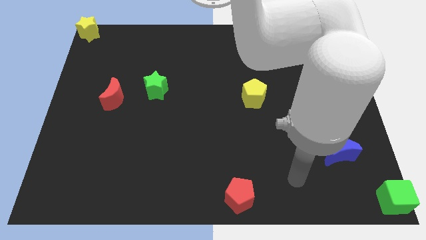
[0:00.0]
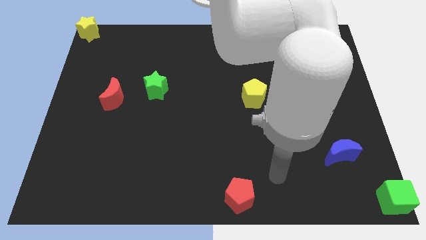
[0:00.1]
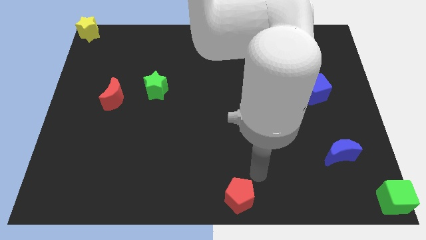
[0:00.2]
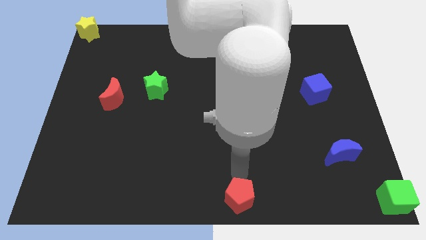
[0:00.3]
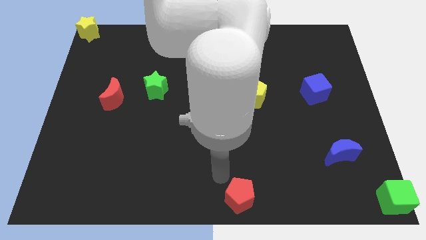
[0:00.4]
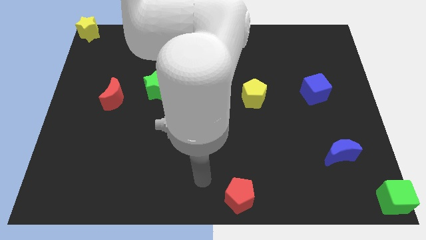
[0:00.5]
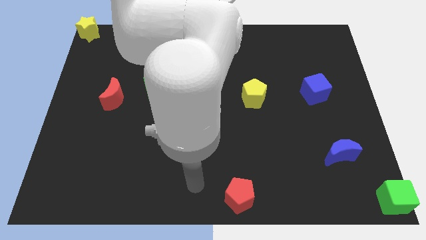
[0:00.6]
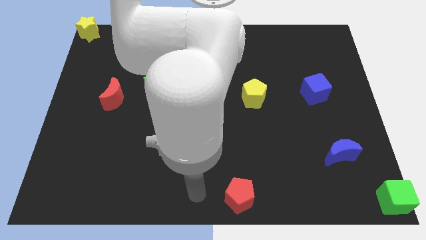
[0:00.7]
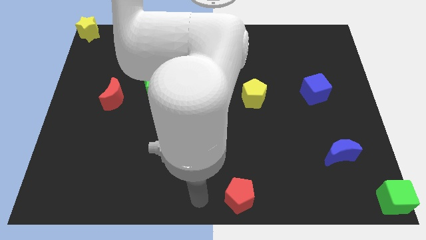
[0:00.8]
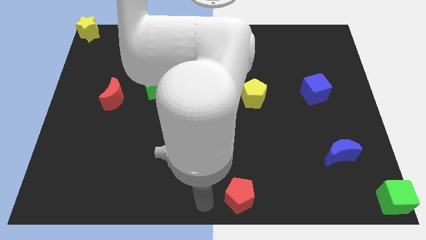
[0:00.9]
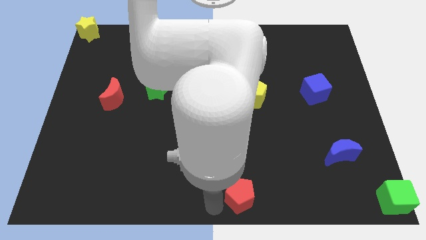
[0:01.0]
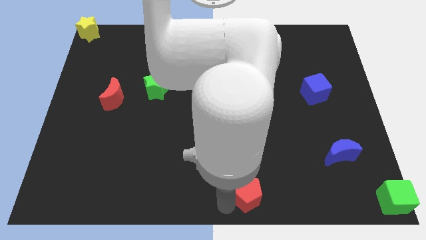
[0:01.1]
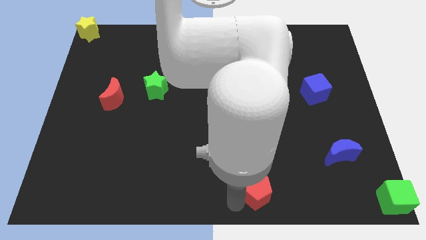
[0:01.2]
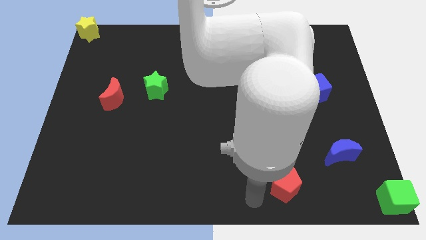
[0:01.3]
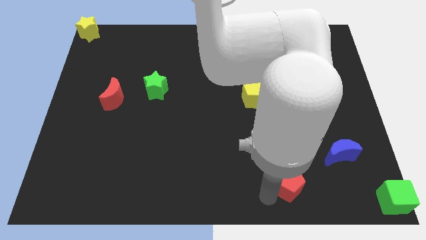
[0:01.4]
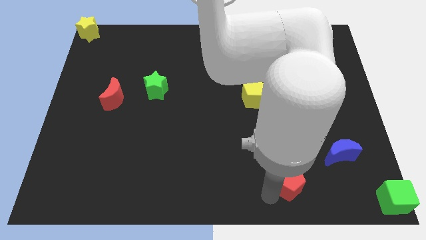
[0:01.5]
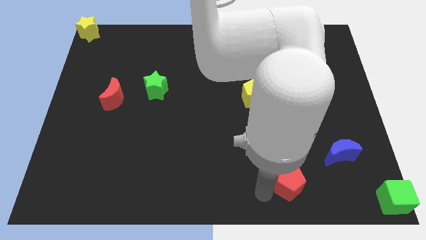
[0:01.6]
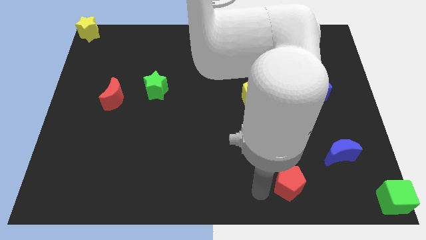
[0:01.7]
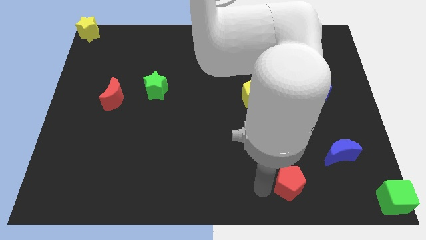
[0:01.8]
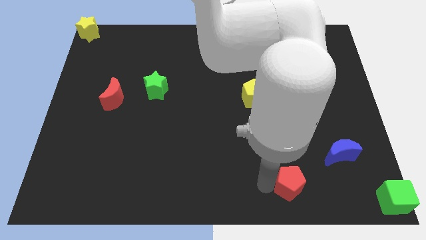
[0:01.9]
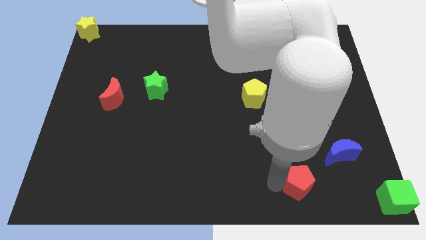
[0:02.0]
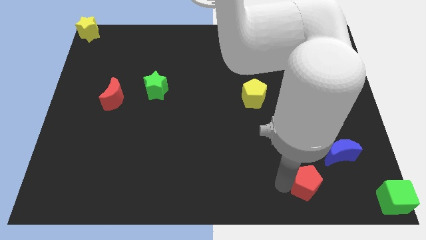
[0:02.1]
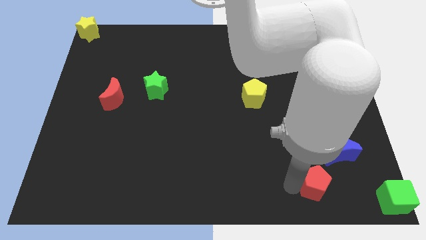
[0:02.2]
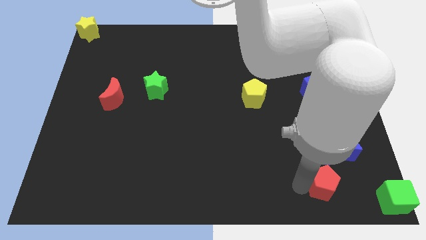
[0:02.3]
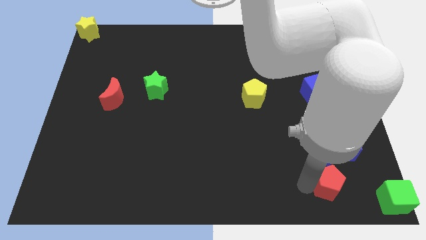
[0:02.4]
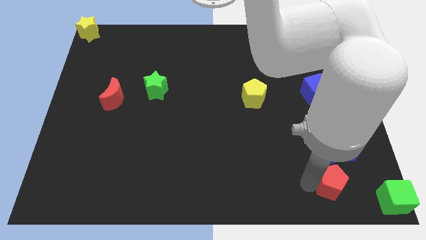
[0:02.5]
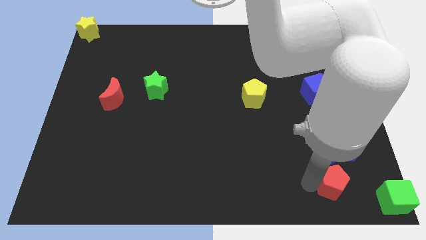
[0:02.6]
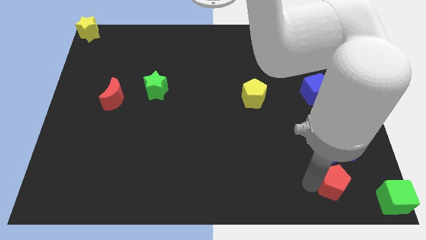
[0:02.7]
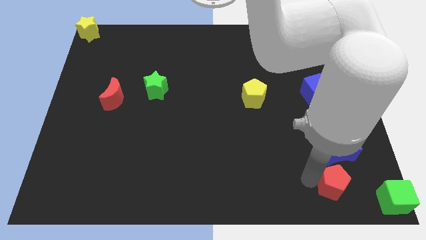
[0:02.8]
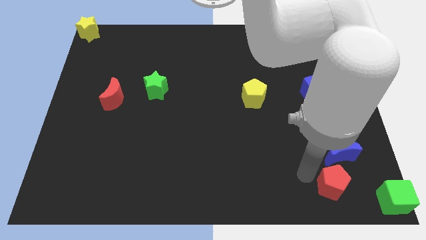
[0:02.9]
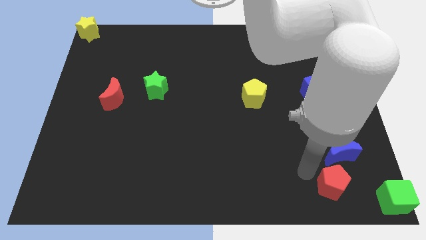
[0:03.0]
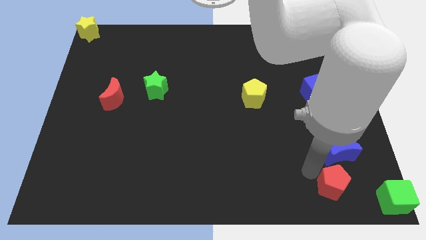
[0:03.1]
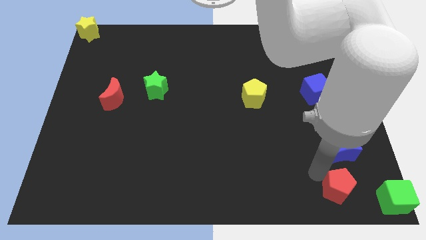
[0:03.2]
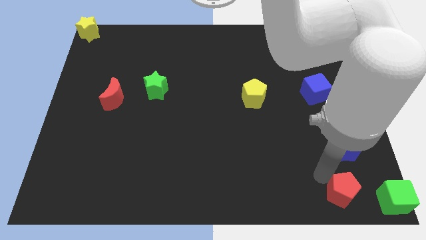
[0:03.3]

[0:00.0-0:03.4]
push the red pentagon towards the green cube

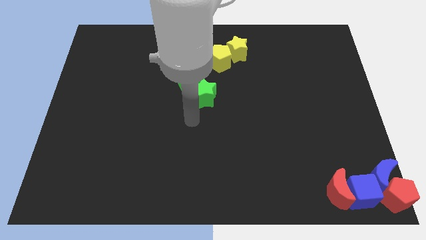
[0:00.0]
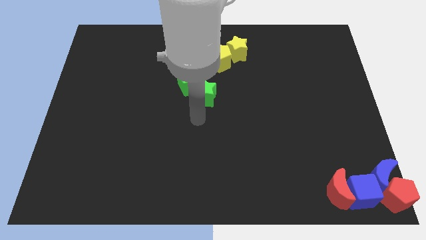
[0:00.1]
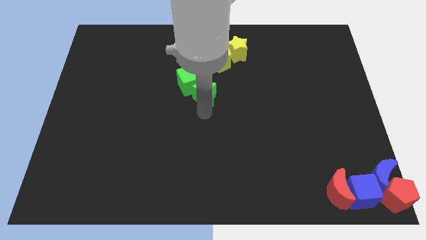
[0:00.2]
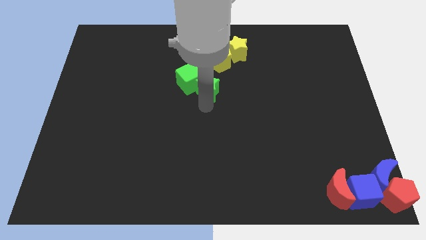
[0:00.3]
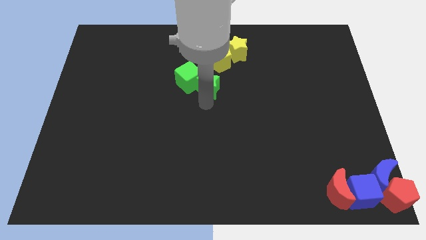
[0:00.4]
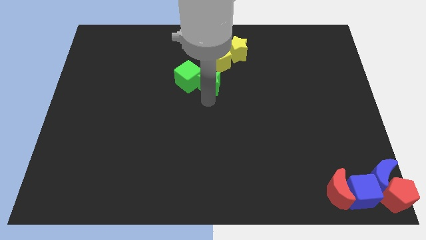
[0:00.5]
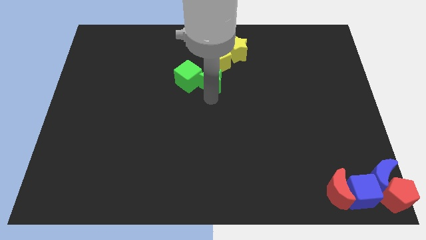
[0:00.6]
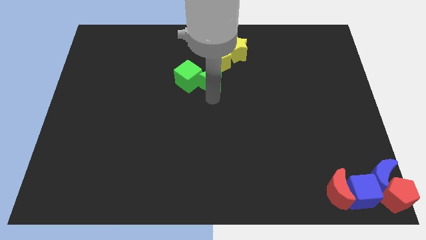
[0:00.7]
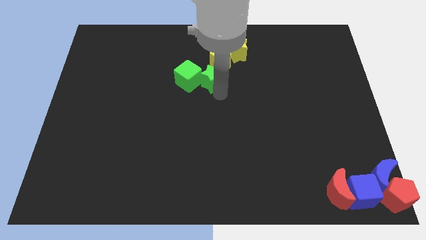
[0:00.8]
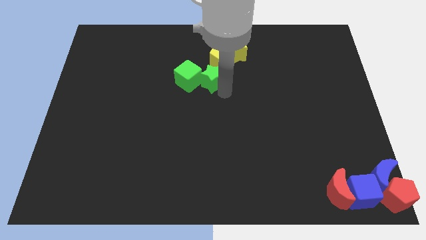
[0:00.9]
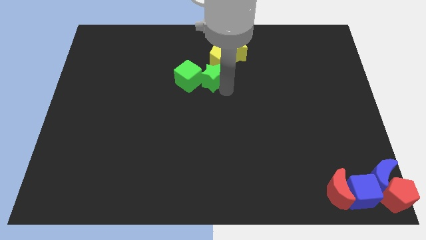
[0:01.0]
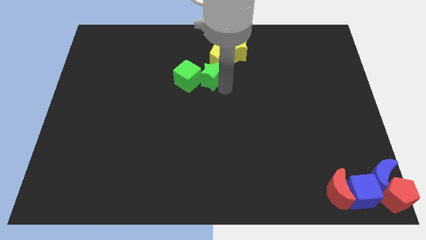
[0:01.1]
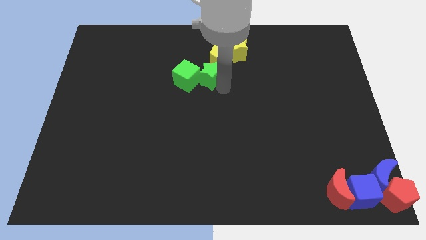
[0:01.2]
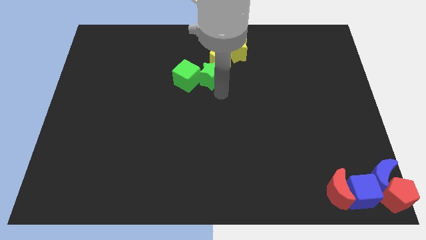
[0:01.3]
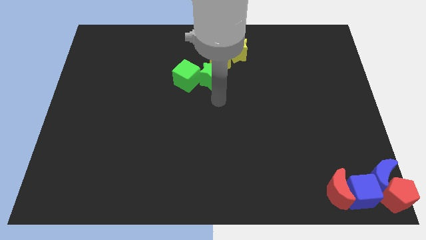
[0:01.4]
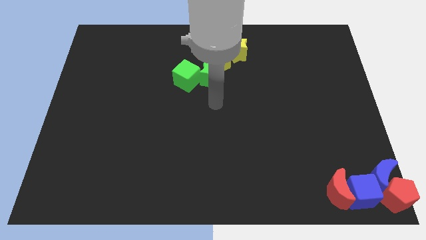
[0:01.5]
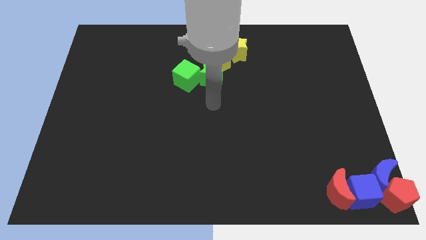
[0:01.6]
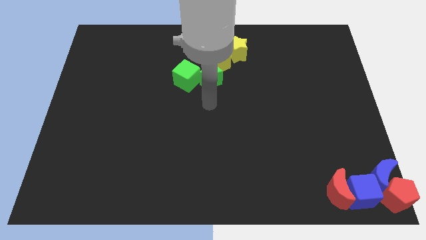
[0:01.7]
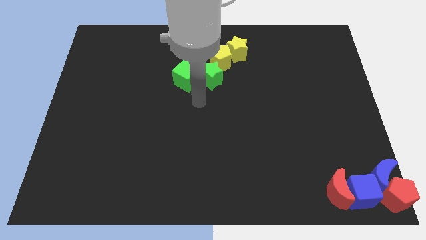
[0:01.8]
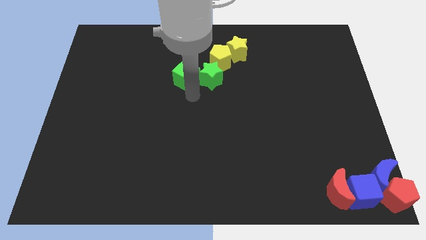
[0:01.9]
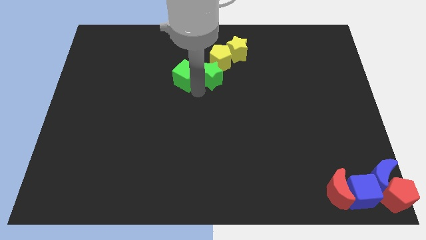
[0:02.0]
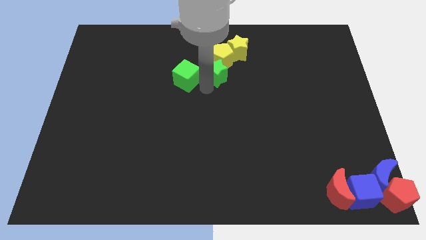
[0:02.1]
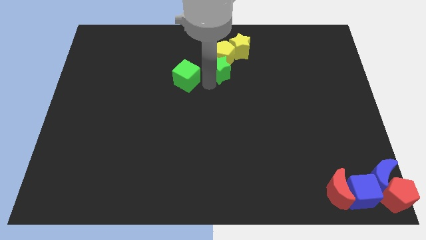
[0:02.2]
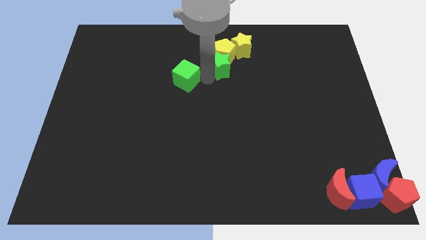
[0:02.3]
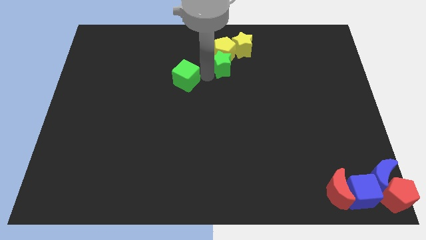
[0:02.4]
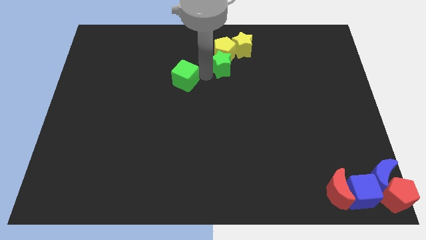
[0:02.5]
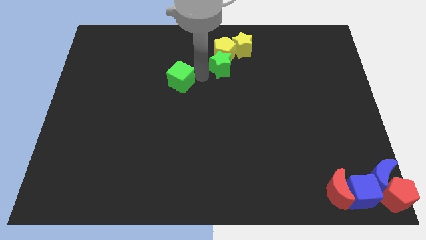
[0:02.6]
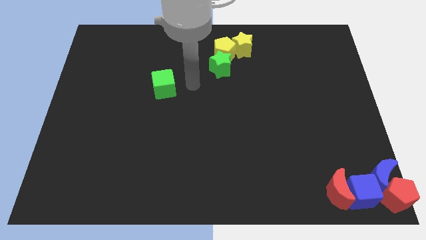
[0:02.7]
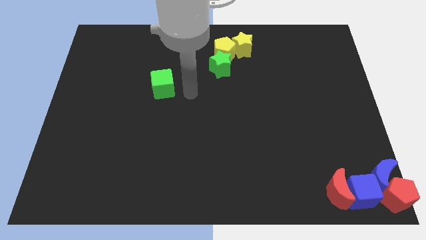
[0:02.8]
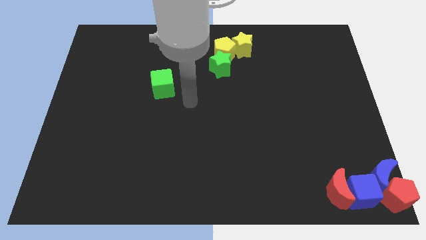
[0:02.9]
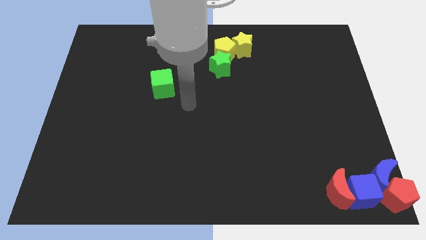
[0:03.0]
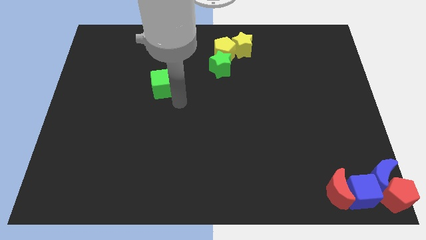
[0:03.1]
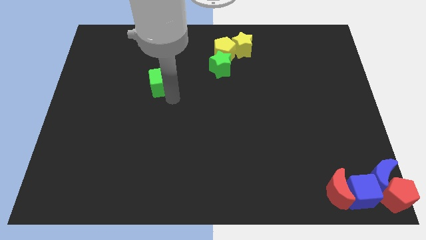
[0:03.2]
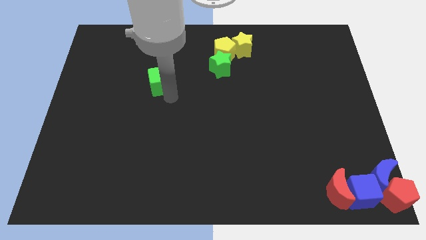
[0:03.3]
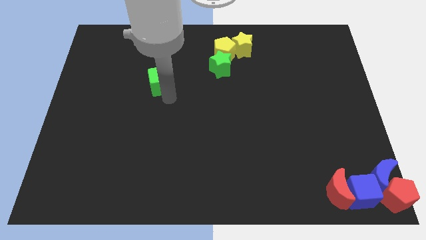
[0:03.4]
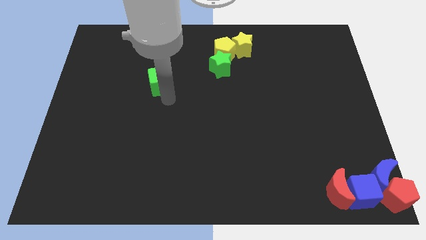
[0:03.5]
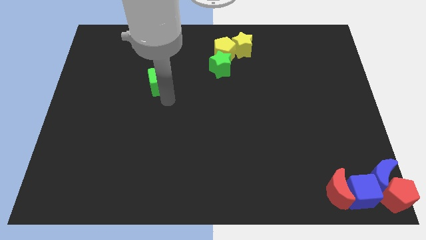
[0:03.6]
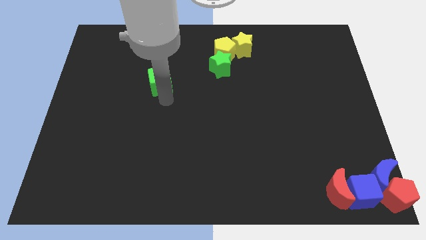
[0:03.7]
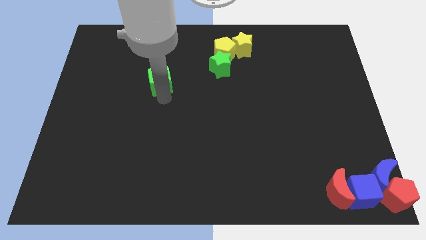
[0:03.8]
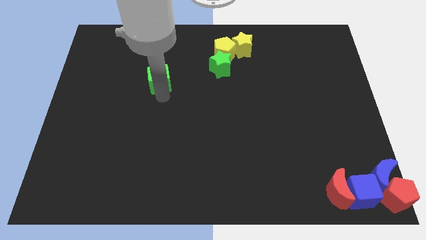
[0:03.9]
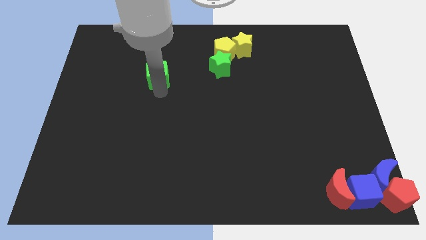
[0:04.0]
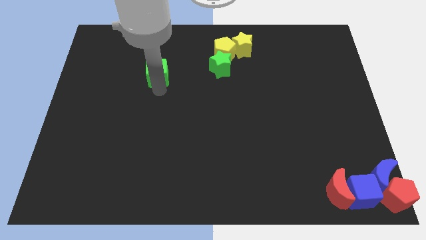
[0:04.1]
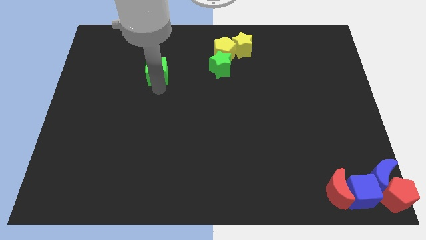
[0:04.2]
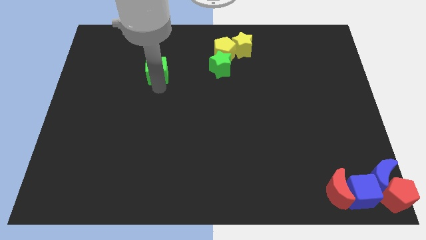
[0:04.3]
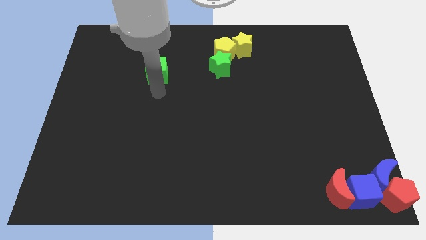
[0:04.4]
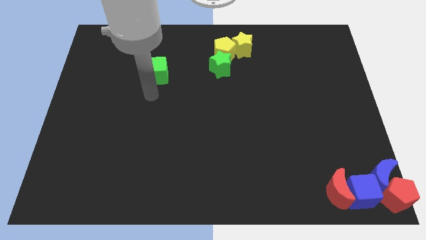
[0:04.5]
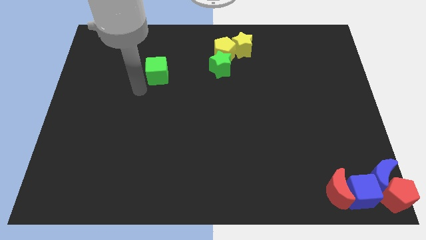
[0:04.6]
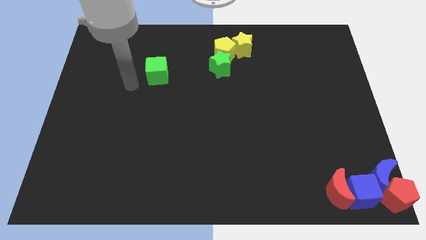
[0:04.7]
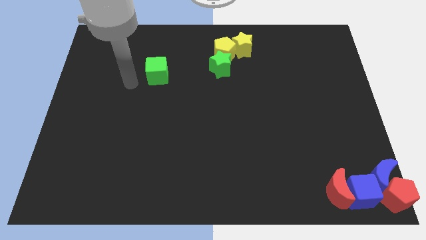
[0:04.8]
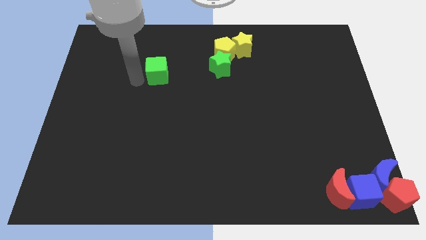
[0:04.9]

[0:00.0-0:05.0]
separate the green cube from the green star

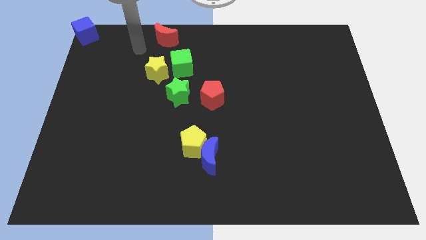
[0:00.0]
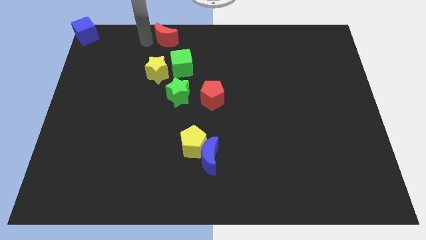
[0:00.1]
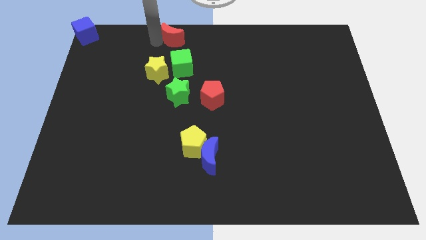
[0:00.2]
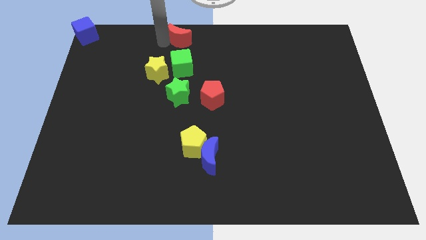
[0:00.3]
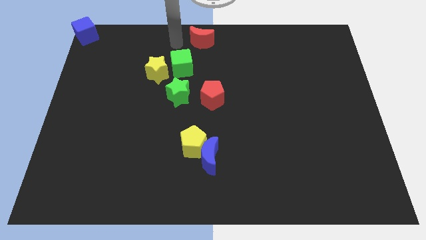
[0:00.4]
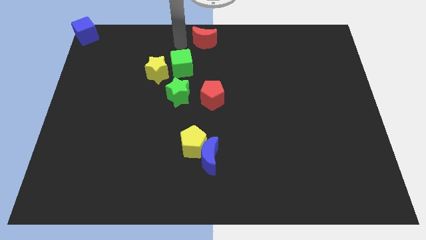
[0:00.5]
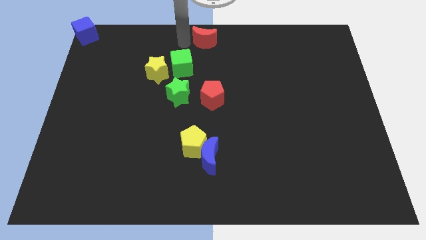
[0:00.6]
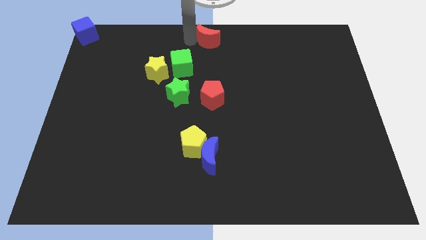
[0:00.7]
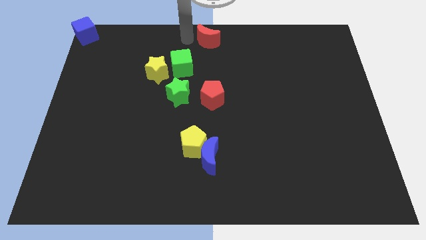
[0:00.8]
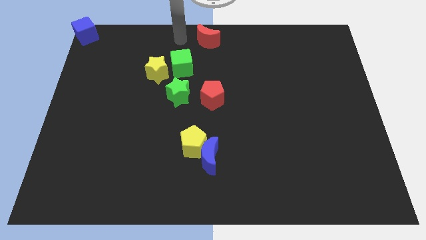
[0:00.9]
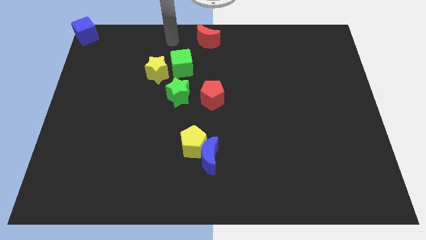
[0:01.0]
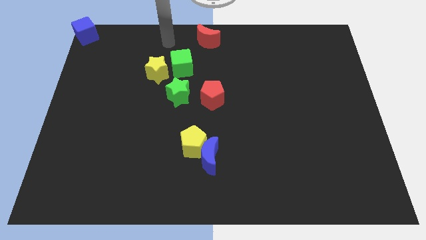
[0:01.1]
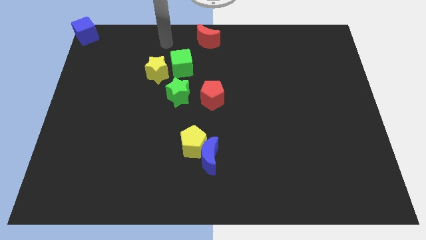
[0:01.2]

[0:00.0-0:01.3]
slide the red crescent slightly to the right
